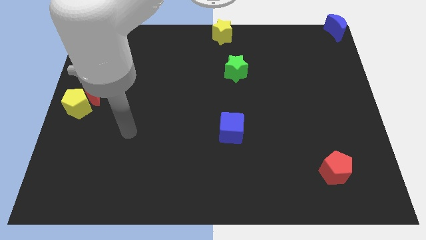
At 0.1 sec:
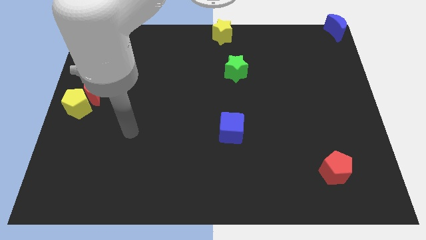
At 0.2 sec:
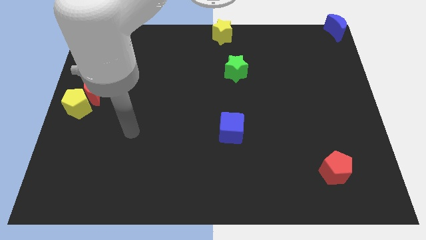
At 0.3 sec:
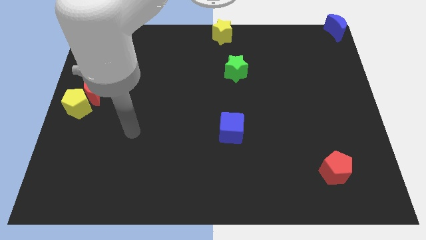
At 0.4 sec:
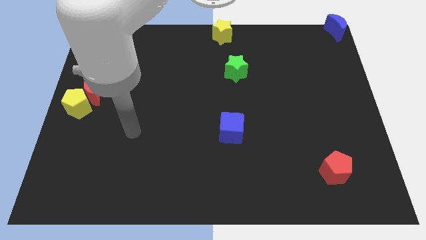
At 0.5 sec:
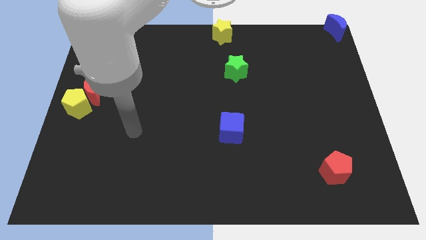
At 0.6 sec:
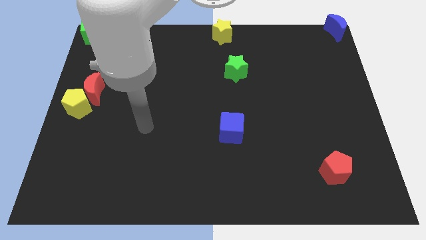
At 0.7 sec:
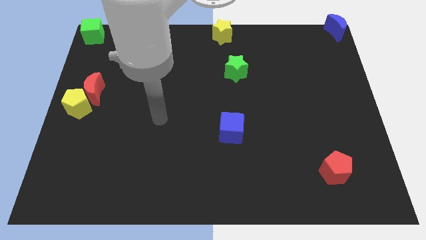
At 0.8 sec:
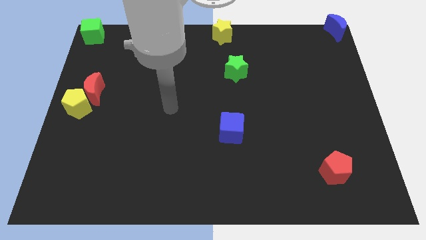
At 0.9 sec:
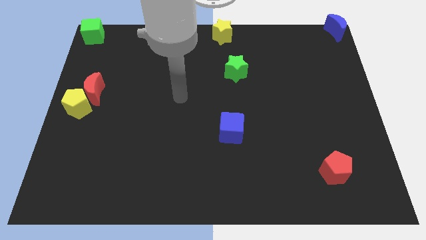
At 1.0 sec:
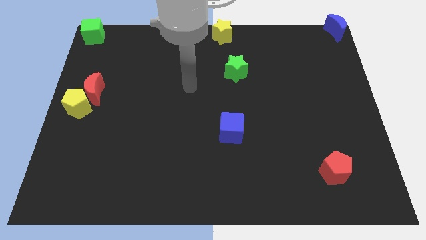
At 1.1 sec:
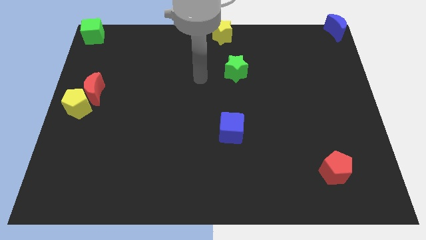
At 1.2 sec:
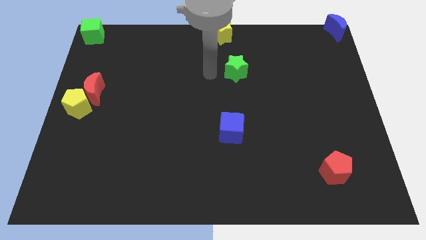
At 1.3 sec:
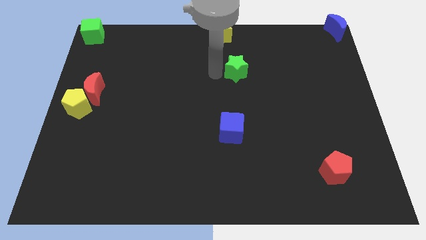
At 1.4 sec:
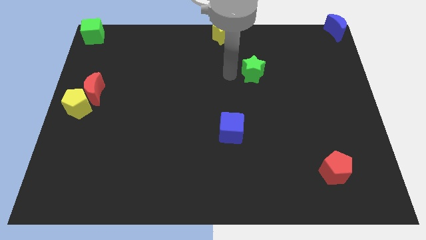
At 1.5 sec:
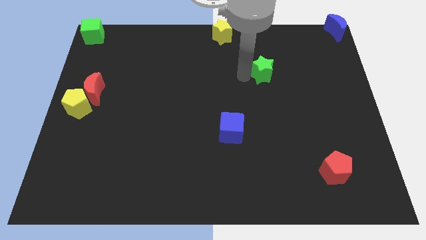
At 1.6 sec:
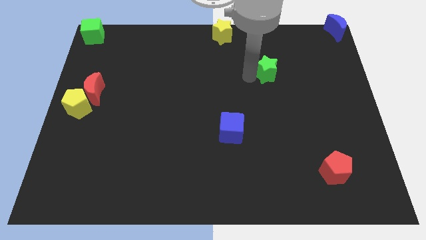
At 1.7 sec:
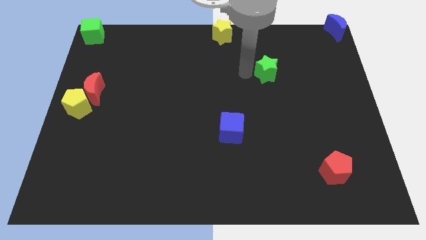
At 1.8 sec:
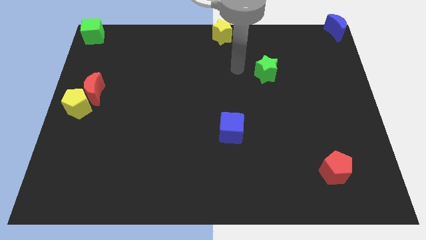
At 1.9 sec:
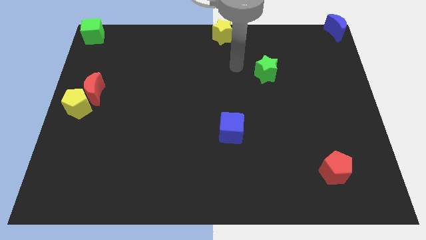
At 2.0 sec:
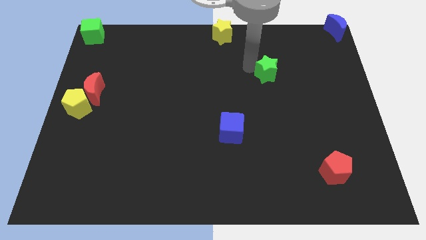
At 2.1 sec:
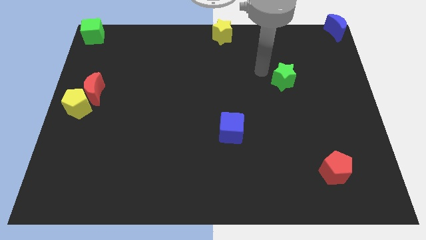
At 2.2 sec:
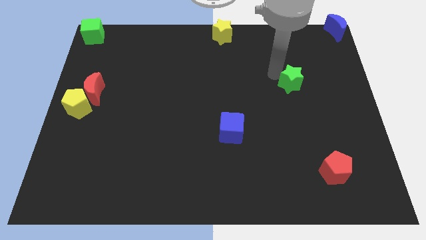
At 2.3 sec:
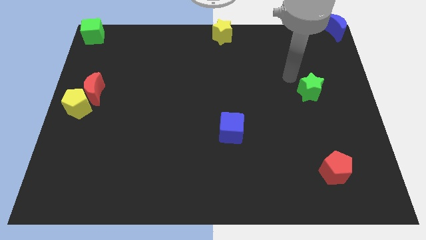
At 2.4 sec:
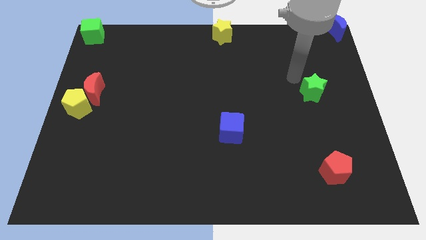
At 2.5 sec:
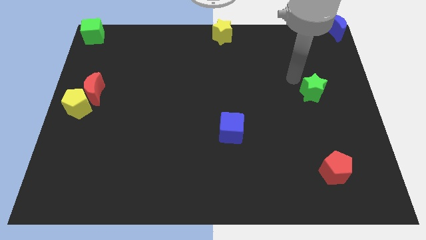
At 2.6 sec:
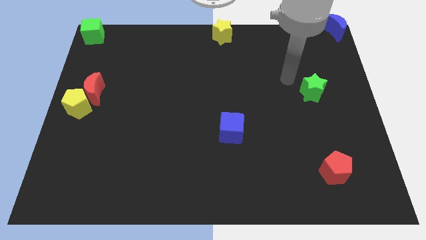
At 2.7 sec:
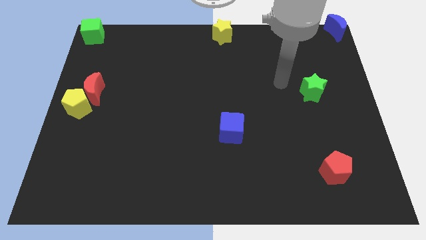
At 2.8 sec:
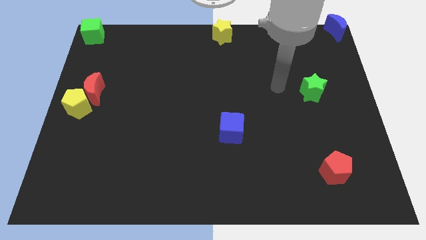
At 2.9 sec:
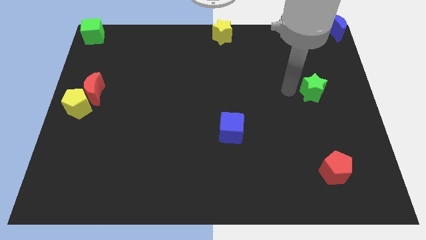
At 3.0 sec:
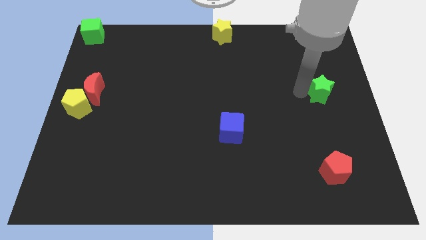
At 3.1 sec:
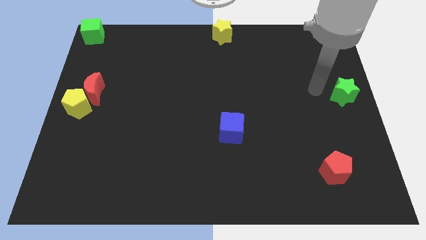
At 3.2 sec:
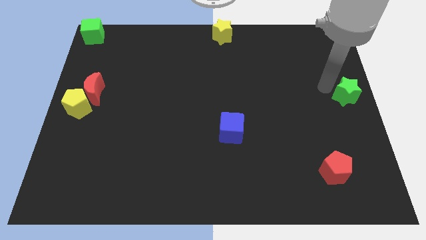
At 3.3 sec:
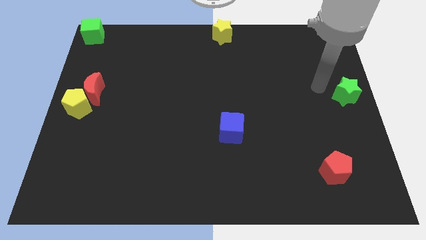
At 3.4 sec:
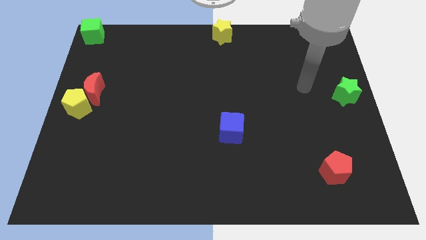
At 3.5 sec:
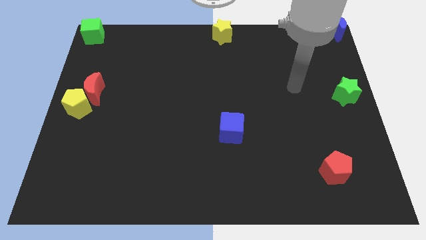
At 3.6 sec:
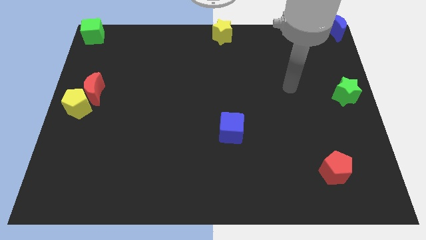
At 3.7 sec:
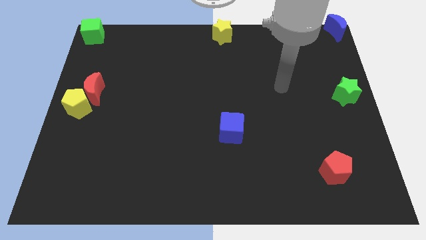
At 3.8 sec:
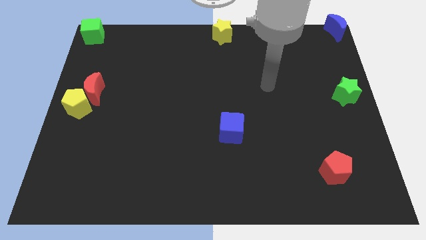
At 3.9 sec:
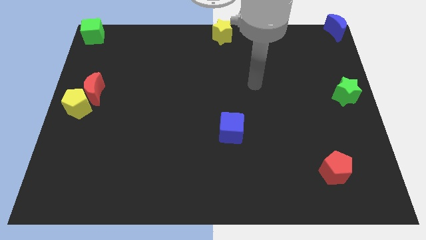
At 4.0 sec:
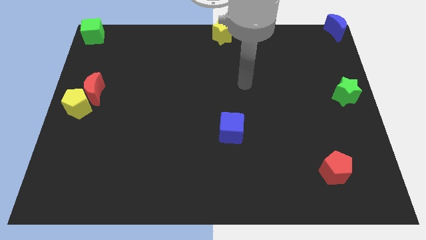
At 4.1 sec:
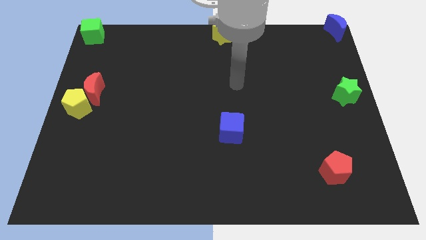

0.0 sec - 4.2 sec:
push the green star below the blue crescent

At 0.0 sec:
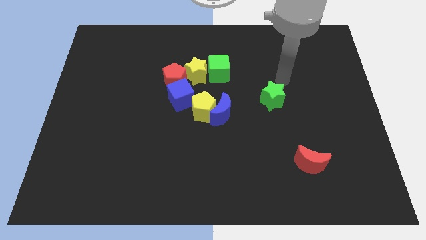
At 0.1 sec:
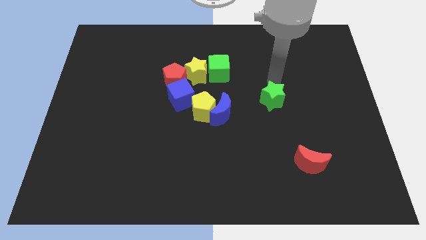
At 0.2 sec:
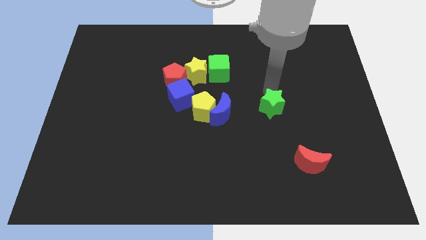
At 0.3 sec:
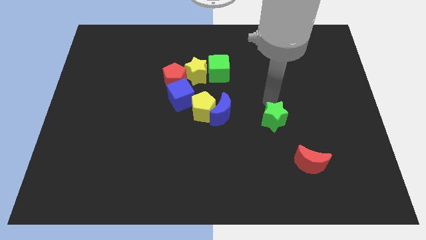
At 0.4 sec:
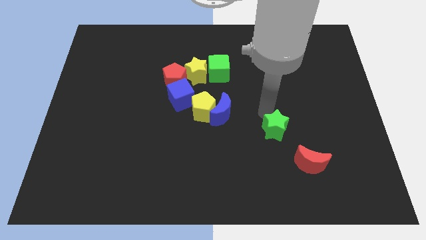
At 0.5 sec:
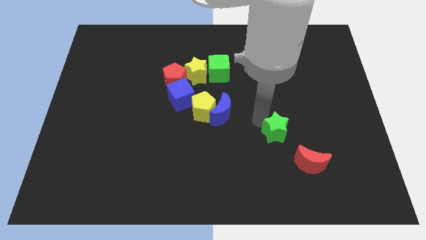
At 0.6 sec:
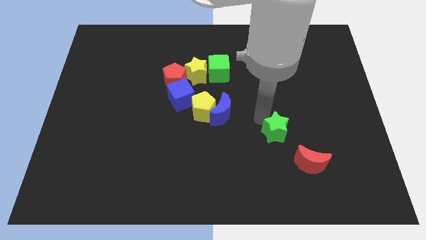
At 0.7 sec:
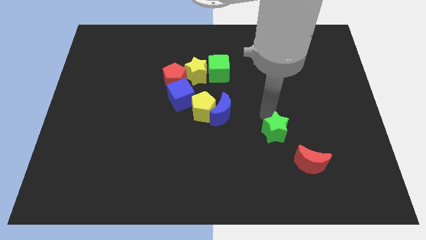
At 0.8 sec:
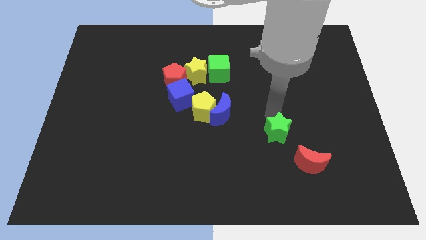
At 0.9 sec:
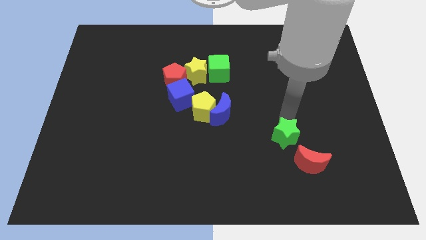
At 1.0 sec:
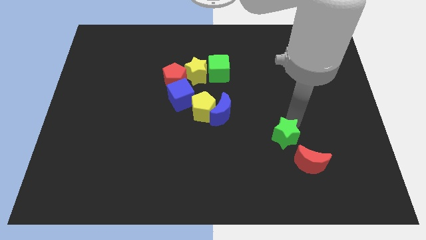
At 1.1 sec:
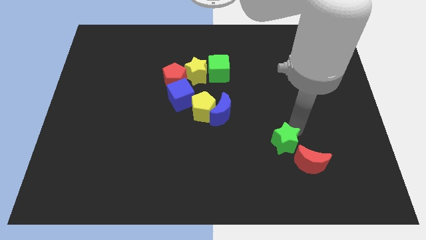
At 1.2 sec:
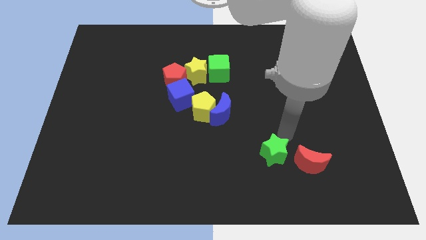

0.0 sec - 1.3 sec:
move the green star to the top left side of the red moon

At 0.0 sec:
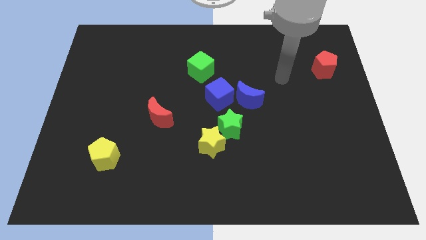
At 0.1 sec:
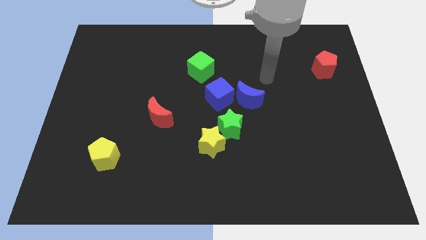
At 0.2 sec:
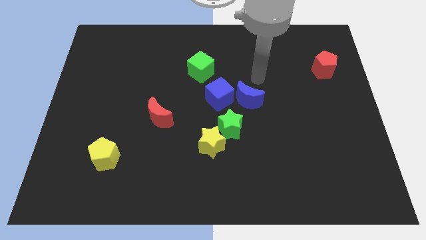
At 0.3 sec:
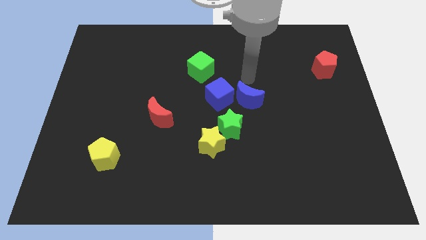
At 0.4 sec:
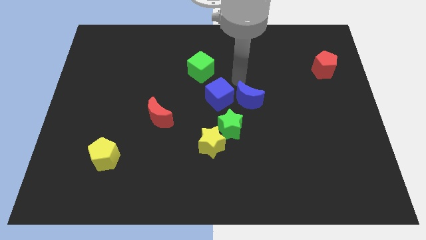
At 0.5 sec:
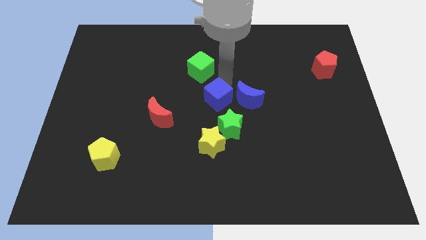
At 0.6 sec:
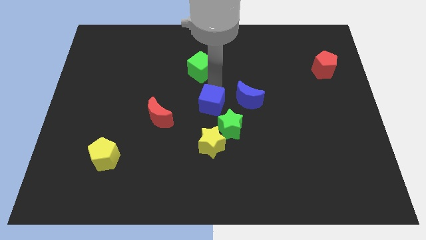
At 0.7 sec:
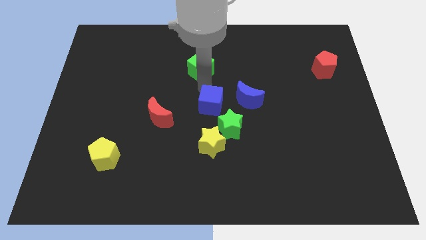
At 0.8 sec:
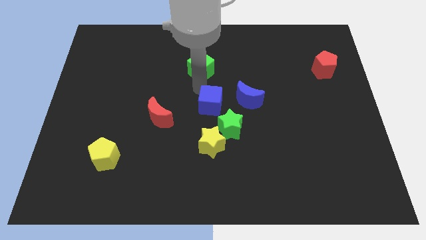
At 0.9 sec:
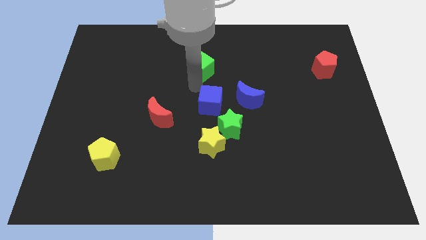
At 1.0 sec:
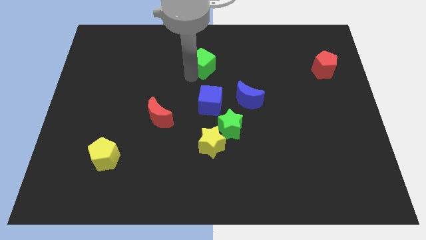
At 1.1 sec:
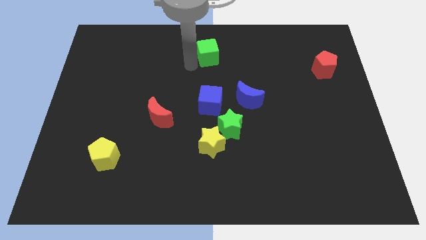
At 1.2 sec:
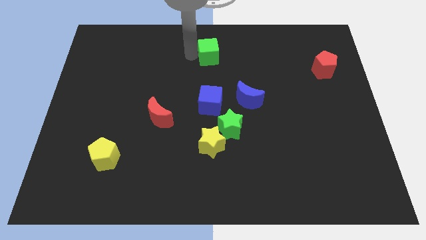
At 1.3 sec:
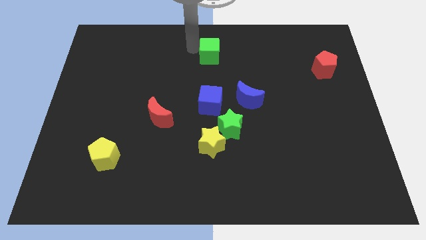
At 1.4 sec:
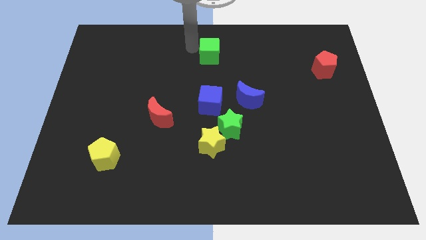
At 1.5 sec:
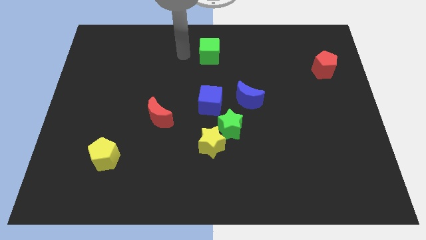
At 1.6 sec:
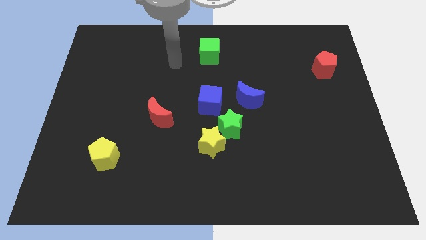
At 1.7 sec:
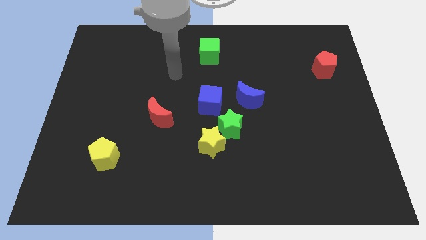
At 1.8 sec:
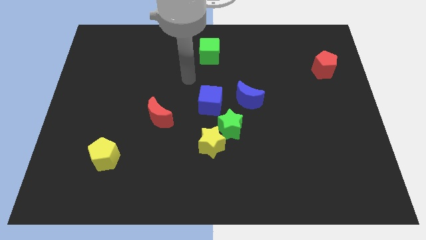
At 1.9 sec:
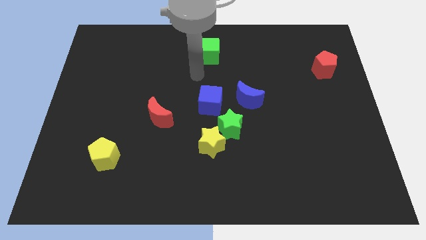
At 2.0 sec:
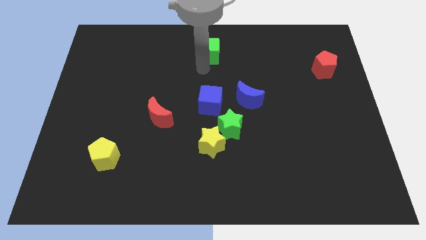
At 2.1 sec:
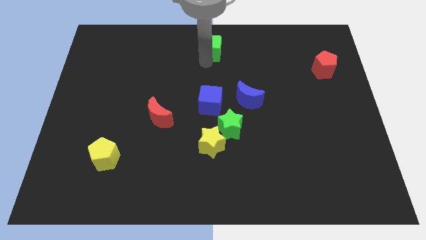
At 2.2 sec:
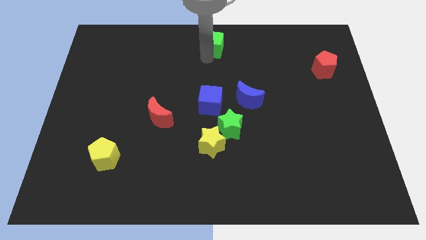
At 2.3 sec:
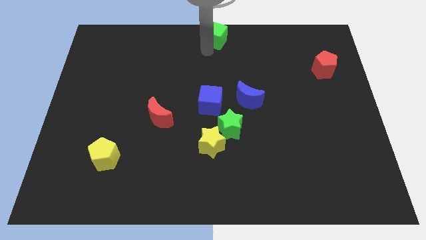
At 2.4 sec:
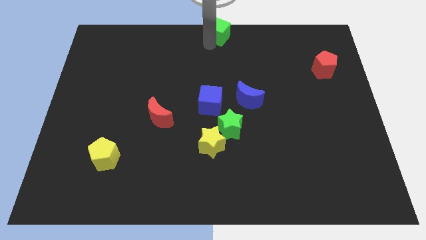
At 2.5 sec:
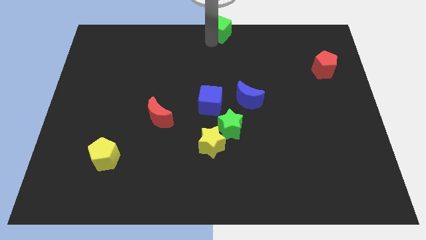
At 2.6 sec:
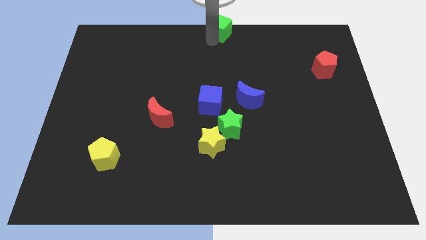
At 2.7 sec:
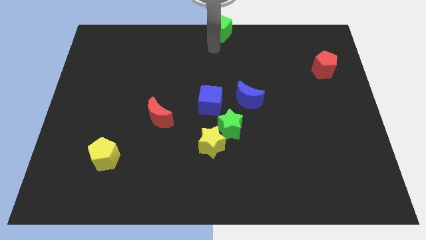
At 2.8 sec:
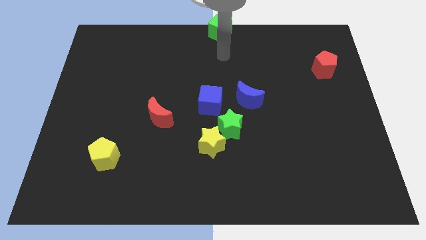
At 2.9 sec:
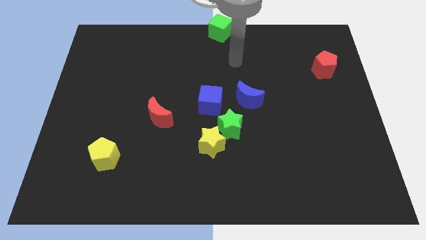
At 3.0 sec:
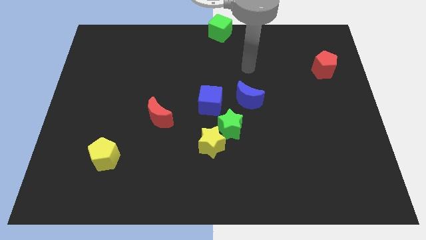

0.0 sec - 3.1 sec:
move the green cube to the top center

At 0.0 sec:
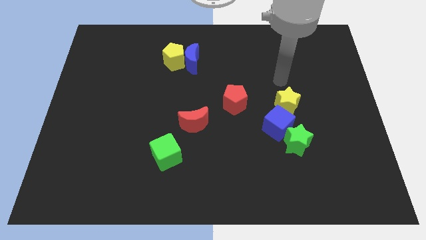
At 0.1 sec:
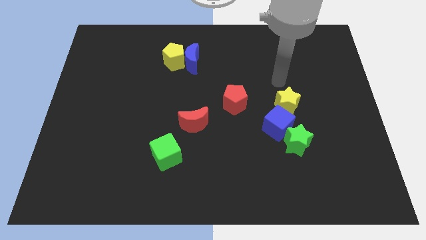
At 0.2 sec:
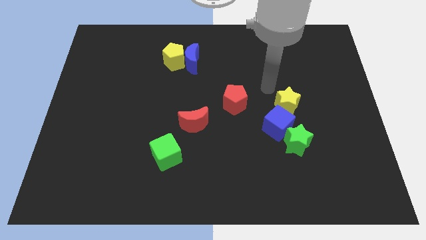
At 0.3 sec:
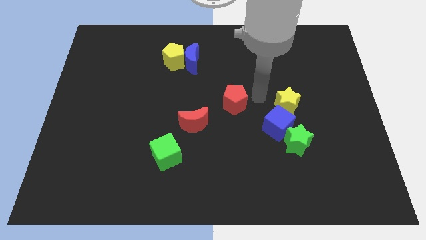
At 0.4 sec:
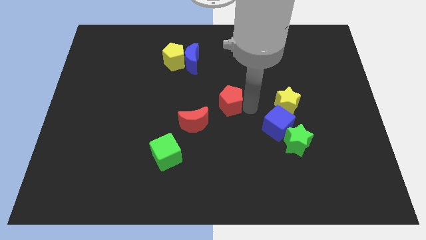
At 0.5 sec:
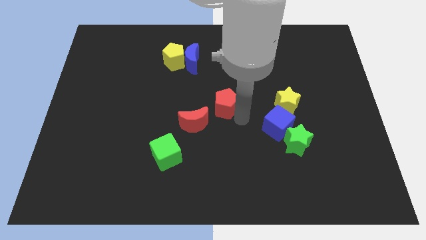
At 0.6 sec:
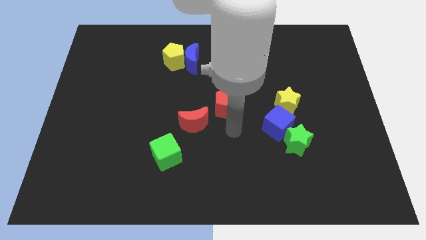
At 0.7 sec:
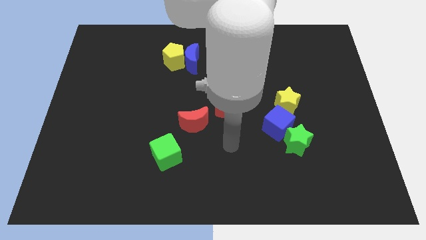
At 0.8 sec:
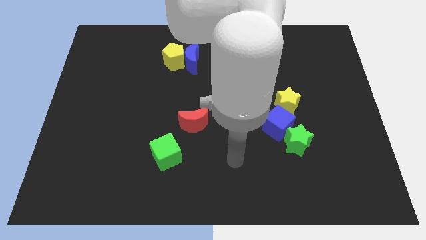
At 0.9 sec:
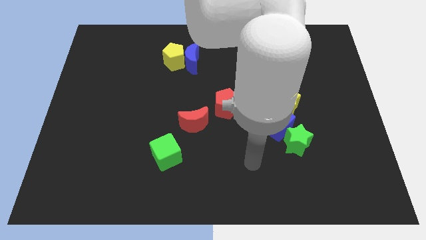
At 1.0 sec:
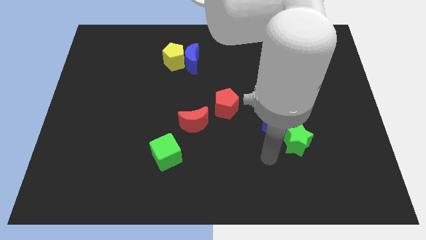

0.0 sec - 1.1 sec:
slightly push the red pentagon towards the red moon
